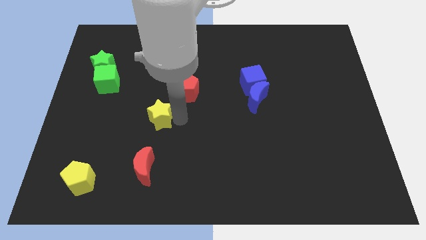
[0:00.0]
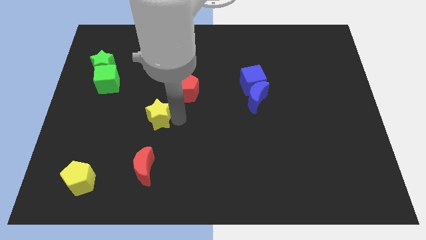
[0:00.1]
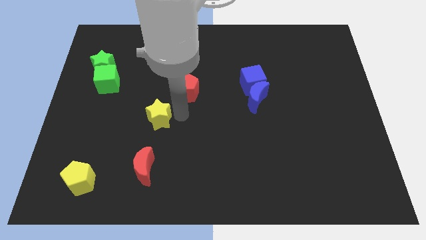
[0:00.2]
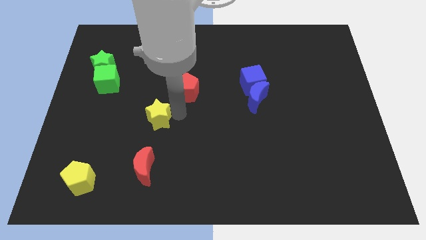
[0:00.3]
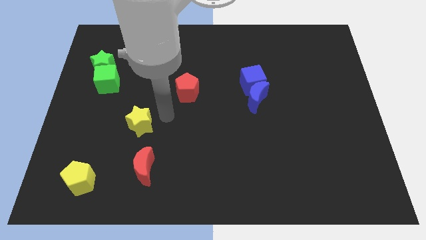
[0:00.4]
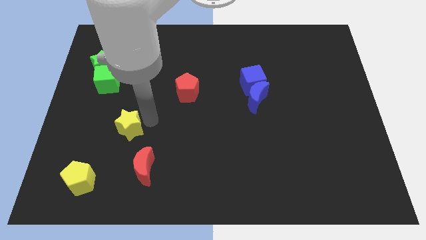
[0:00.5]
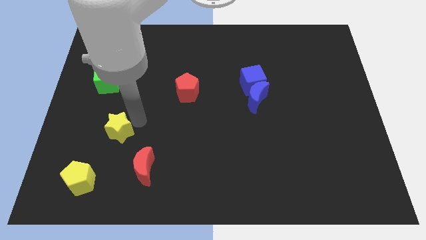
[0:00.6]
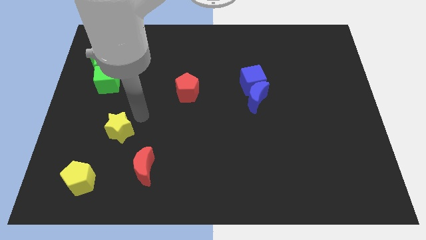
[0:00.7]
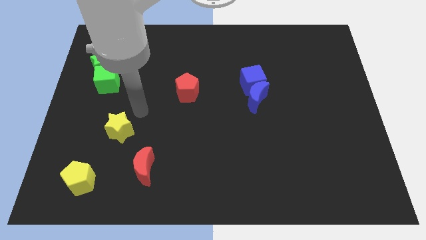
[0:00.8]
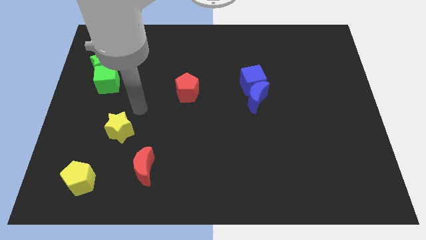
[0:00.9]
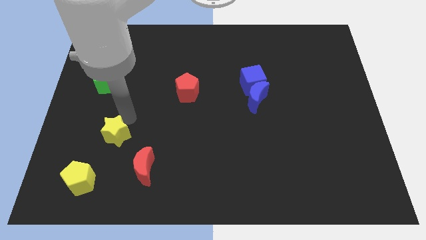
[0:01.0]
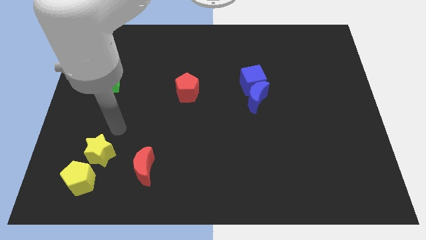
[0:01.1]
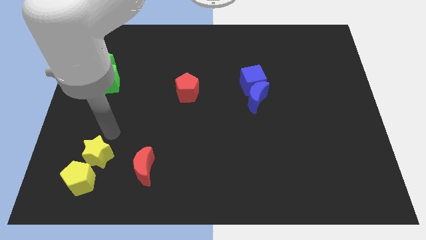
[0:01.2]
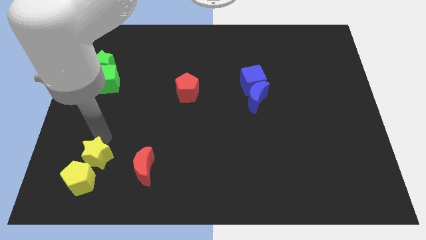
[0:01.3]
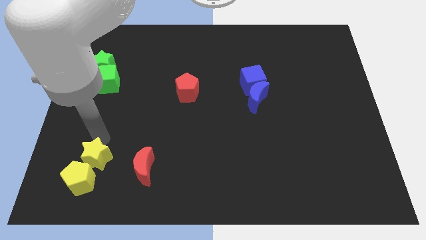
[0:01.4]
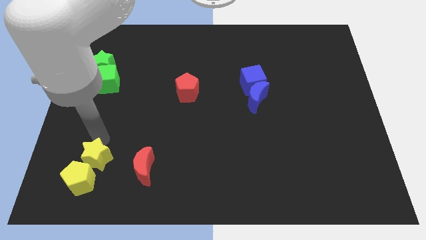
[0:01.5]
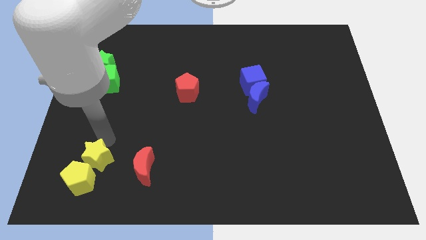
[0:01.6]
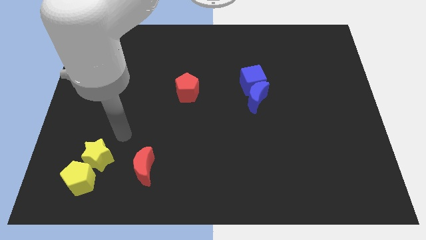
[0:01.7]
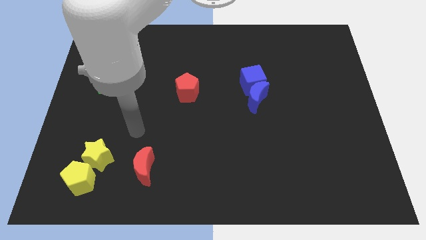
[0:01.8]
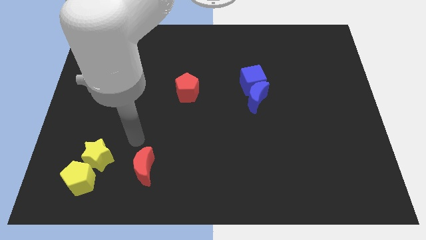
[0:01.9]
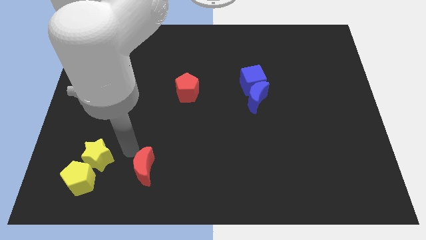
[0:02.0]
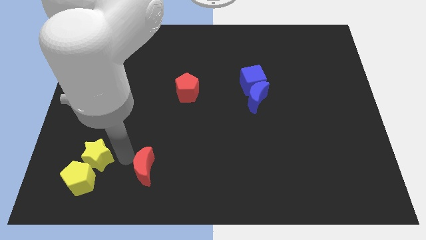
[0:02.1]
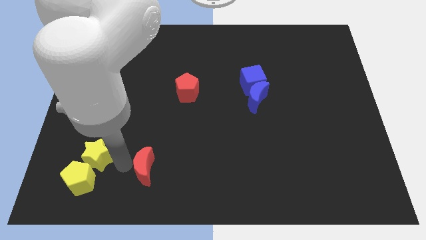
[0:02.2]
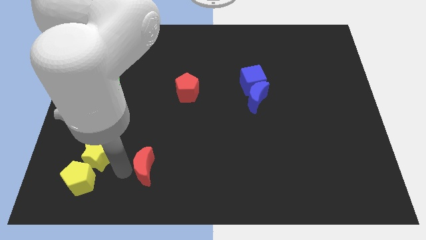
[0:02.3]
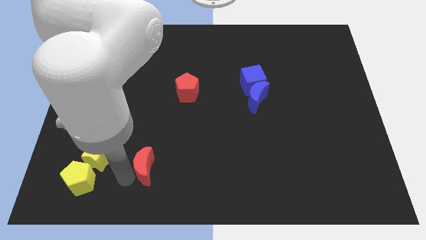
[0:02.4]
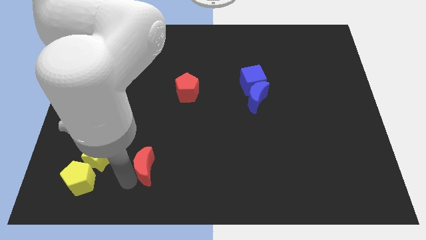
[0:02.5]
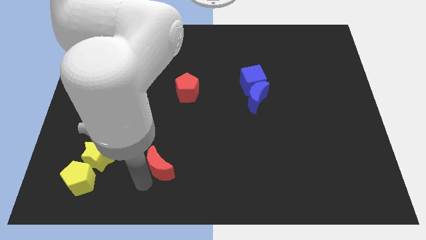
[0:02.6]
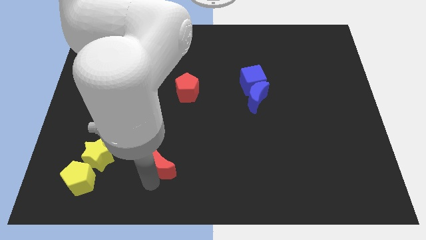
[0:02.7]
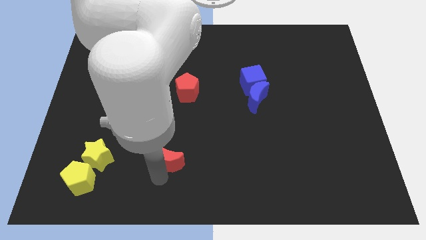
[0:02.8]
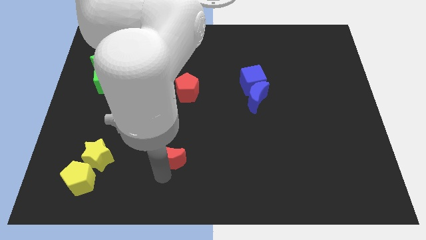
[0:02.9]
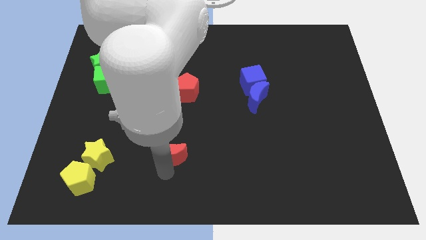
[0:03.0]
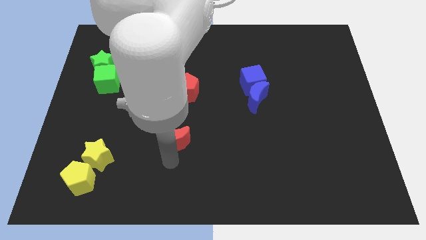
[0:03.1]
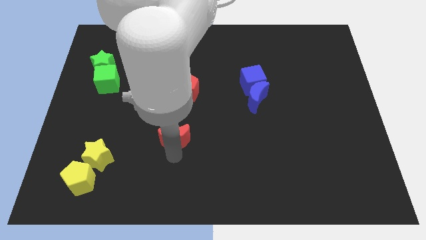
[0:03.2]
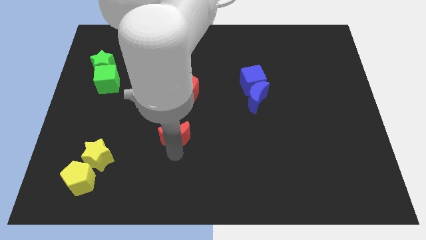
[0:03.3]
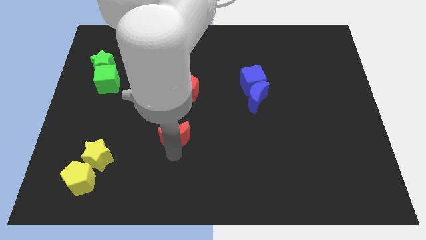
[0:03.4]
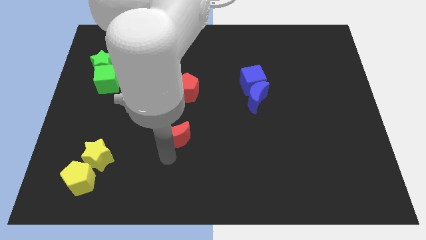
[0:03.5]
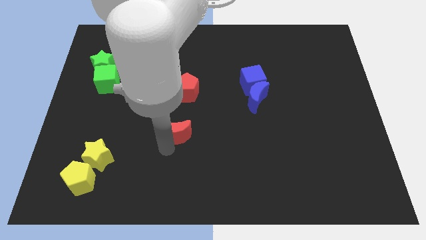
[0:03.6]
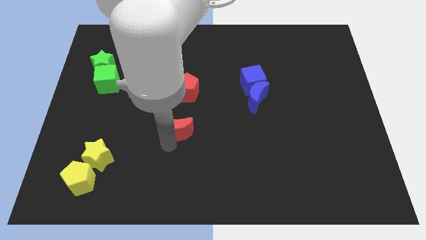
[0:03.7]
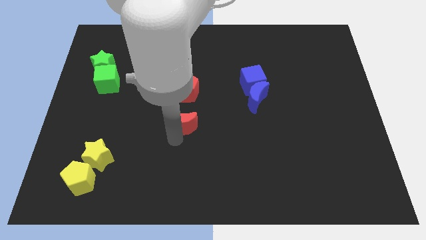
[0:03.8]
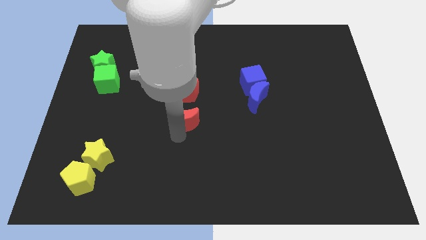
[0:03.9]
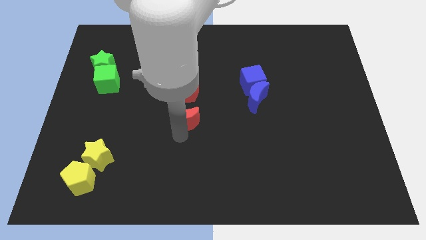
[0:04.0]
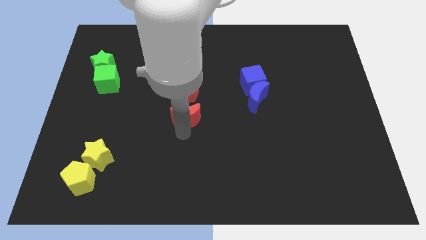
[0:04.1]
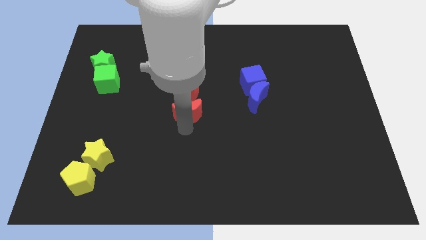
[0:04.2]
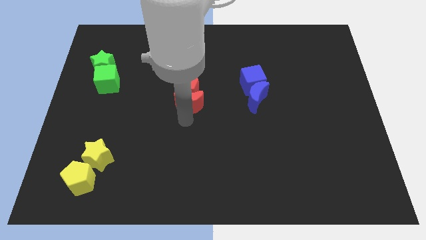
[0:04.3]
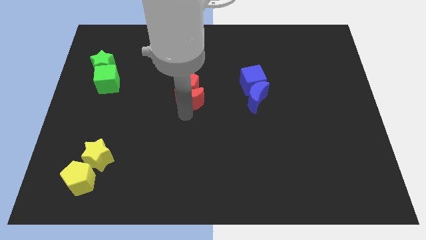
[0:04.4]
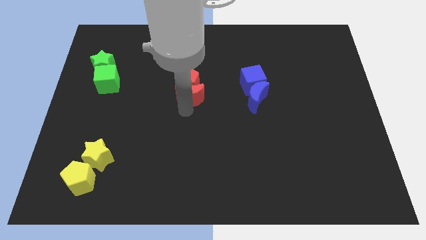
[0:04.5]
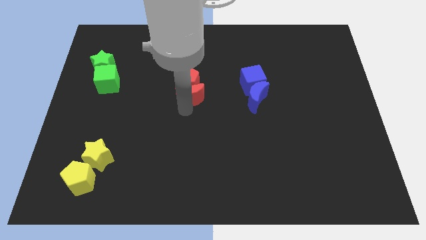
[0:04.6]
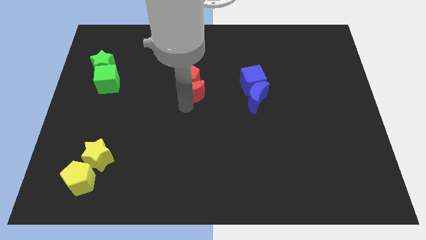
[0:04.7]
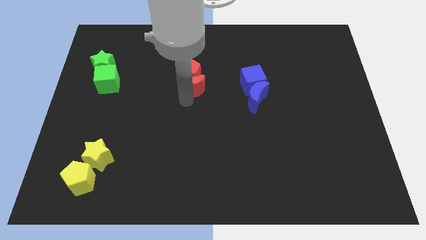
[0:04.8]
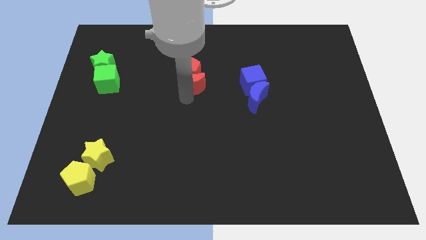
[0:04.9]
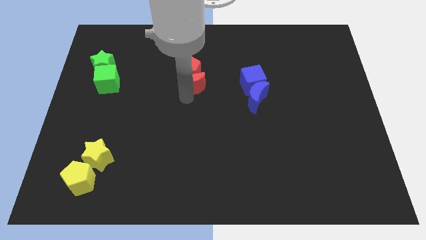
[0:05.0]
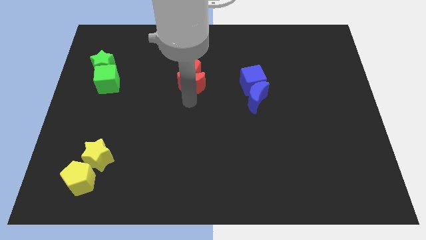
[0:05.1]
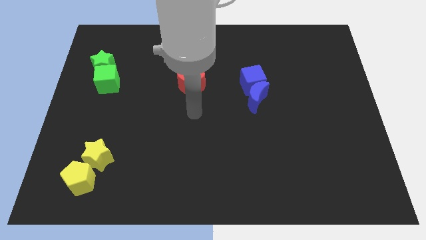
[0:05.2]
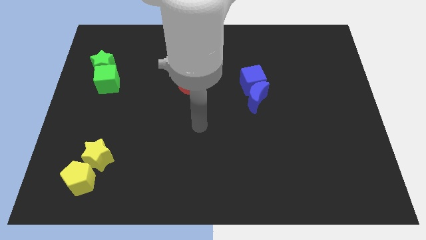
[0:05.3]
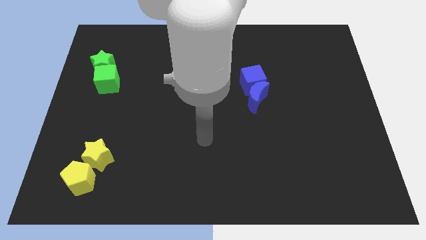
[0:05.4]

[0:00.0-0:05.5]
place the yellow blocks and red blocks together

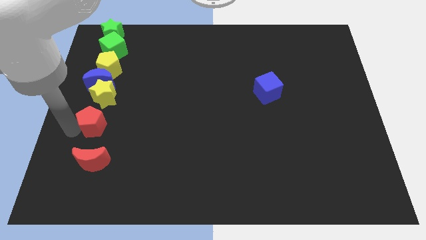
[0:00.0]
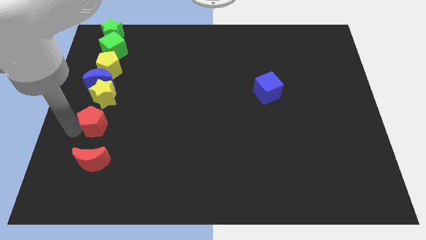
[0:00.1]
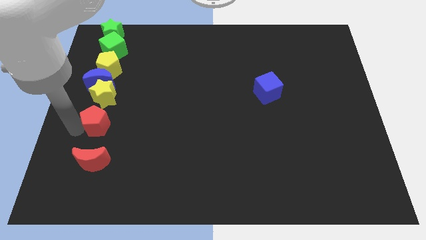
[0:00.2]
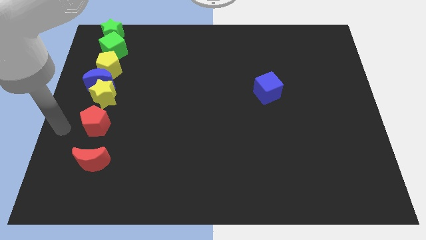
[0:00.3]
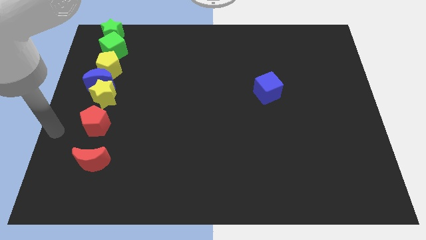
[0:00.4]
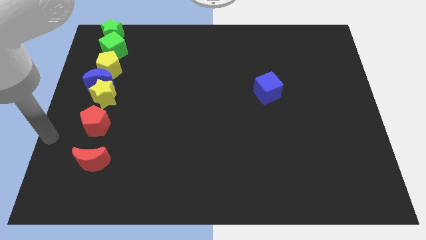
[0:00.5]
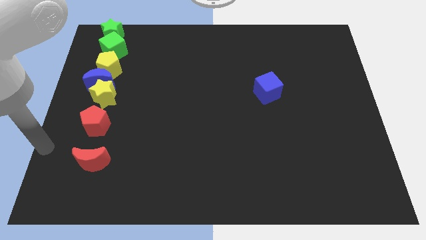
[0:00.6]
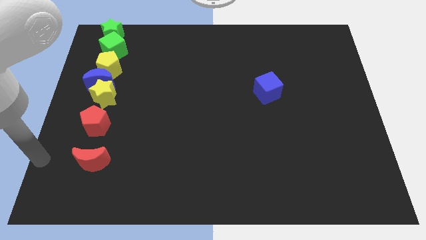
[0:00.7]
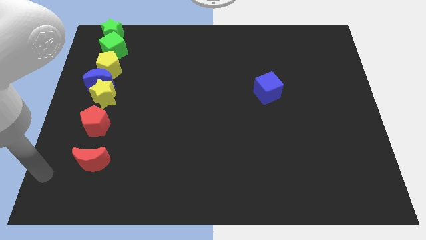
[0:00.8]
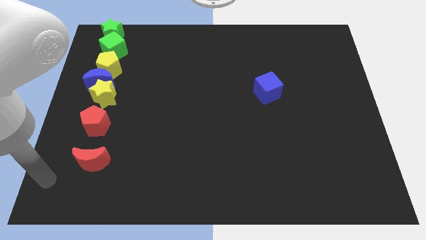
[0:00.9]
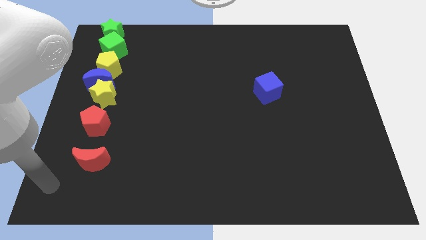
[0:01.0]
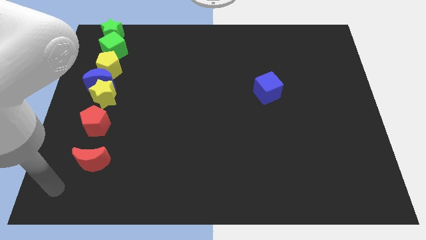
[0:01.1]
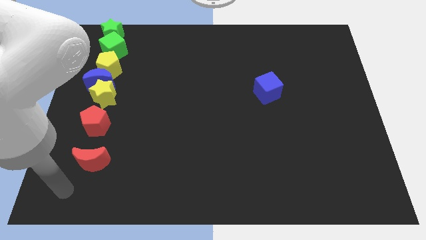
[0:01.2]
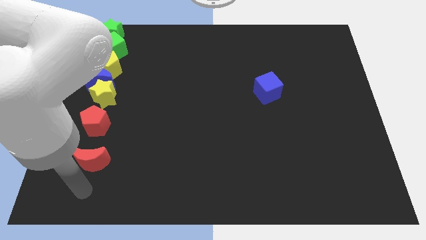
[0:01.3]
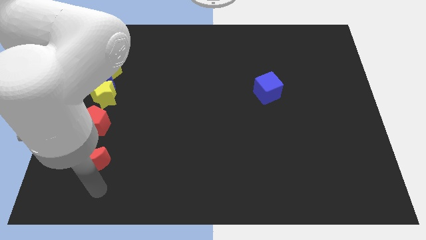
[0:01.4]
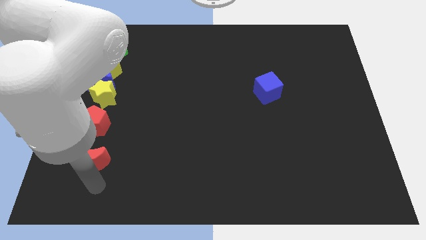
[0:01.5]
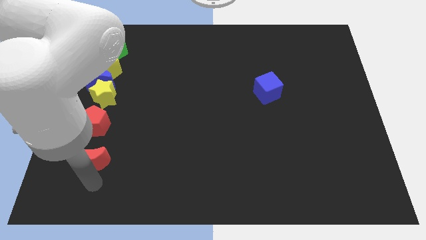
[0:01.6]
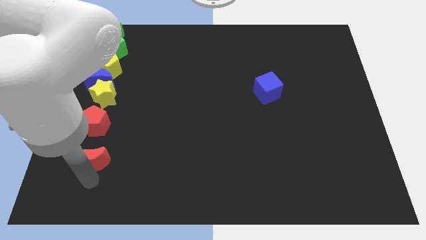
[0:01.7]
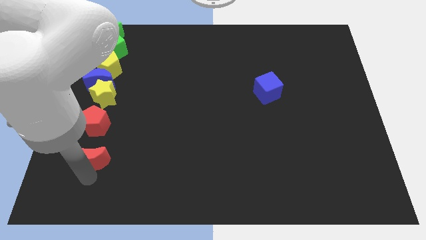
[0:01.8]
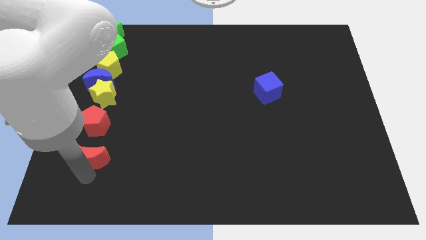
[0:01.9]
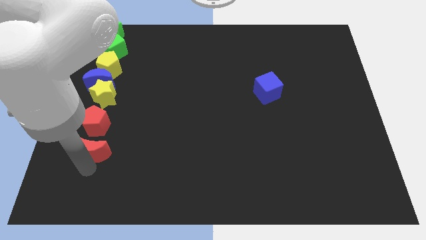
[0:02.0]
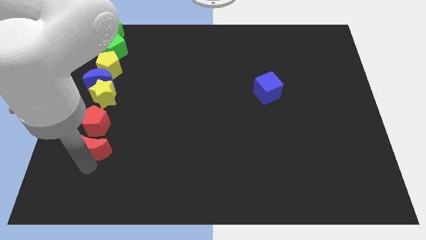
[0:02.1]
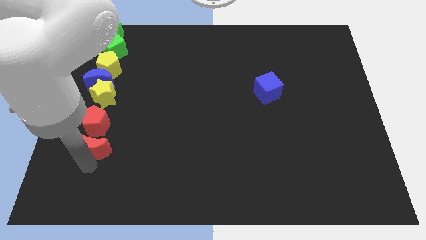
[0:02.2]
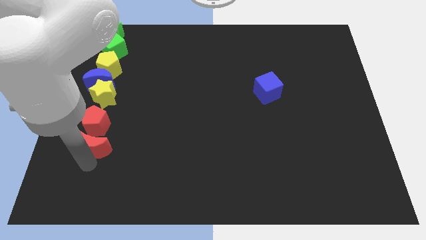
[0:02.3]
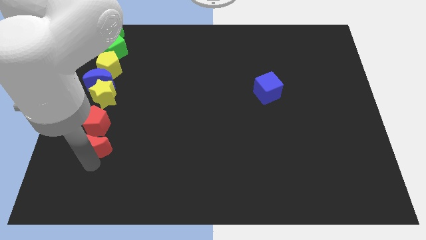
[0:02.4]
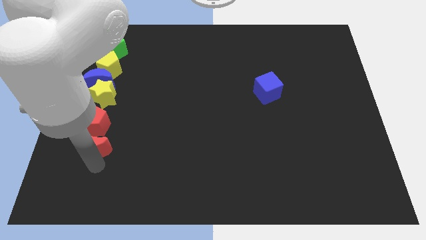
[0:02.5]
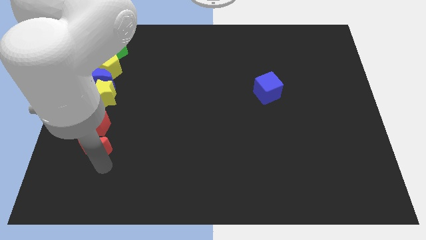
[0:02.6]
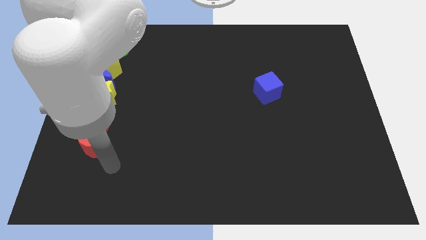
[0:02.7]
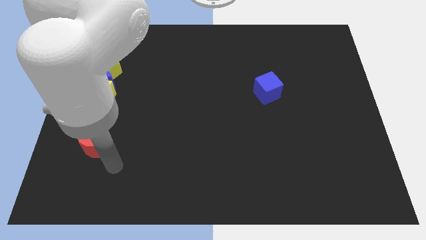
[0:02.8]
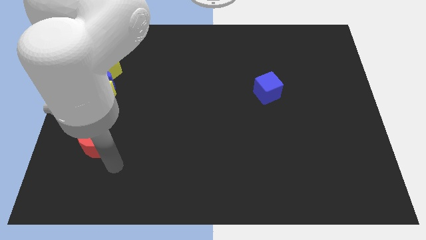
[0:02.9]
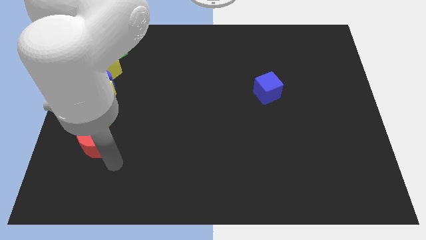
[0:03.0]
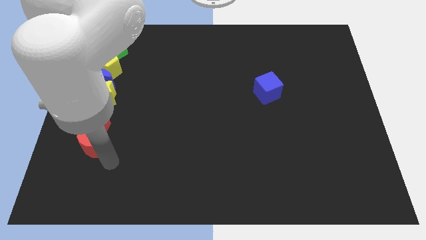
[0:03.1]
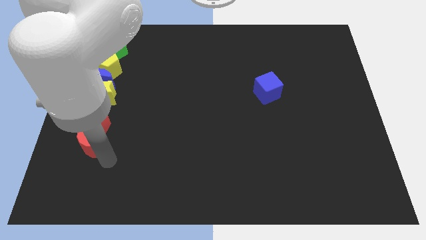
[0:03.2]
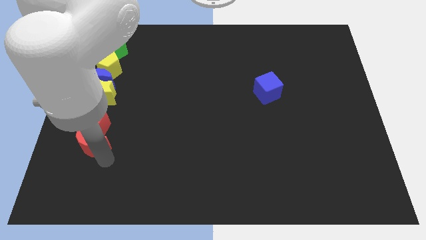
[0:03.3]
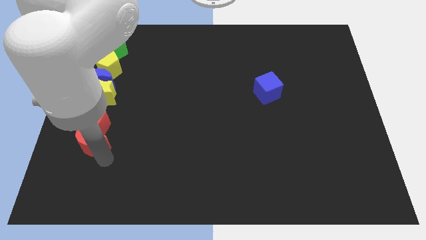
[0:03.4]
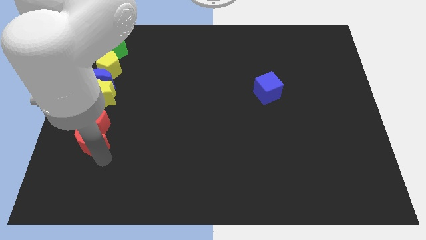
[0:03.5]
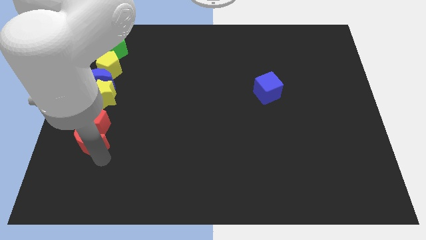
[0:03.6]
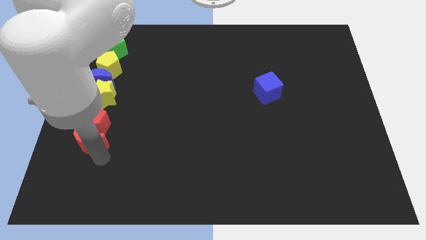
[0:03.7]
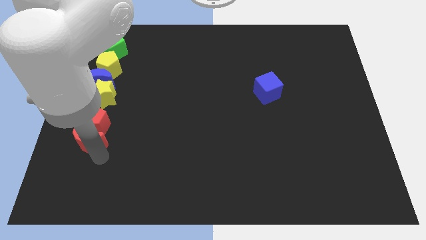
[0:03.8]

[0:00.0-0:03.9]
slide the red moon close to the bottom side of the red pentagon
